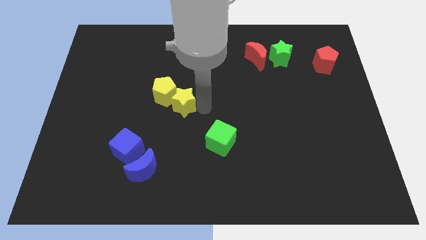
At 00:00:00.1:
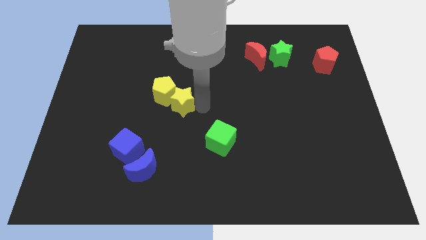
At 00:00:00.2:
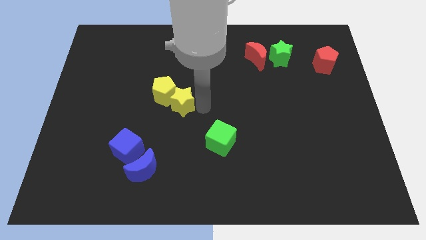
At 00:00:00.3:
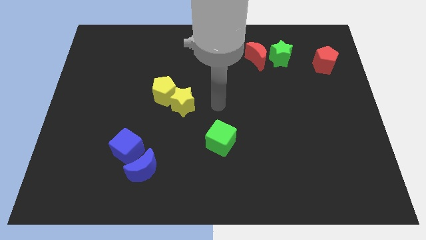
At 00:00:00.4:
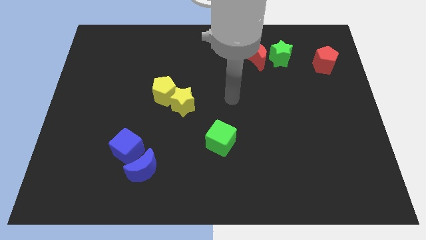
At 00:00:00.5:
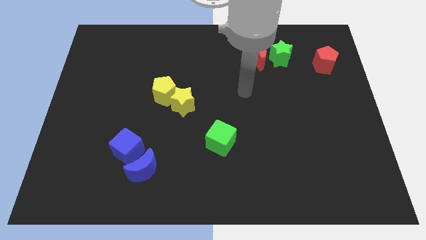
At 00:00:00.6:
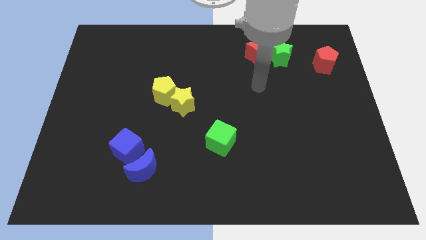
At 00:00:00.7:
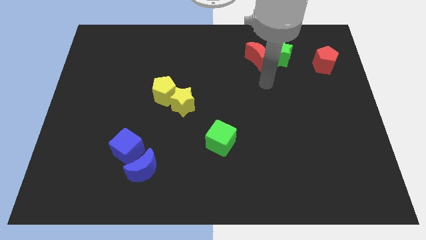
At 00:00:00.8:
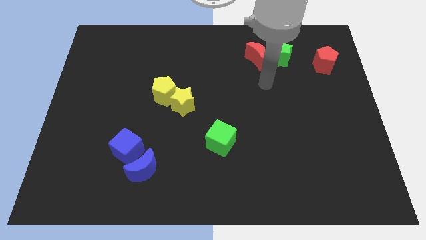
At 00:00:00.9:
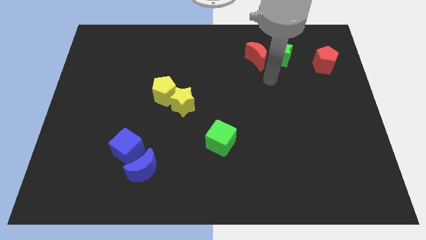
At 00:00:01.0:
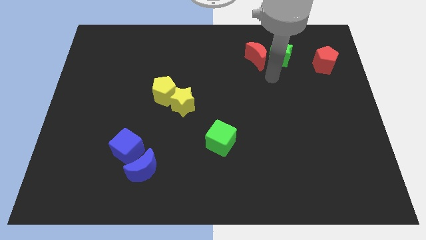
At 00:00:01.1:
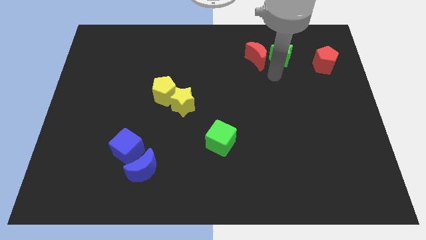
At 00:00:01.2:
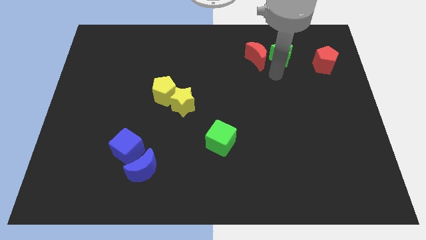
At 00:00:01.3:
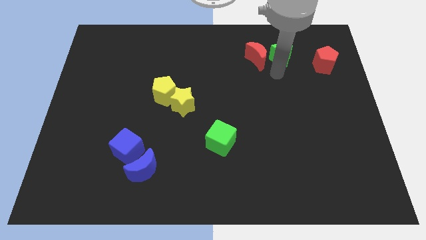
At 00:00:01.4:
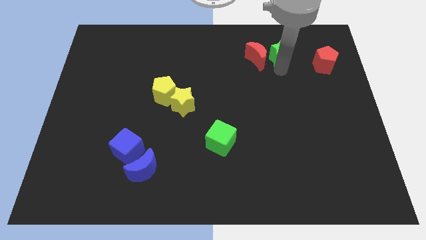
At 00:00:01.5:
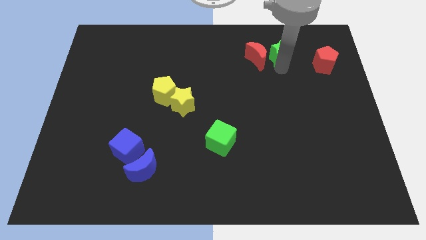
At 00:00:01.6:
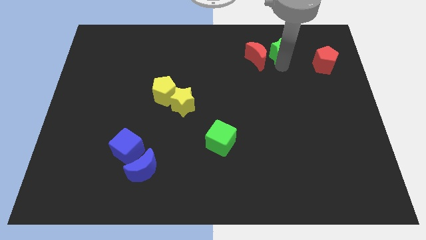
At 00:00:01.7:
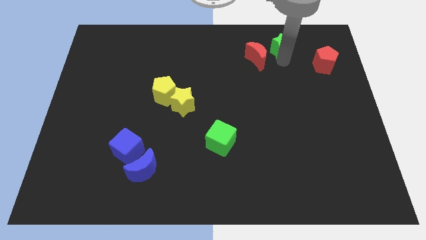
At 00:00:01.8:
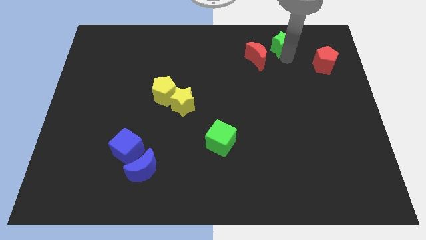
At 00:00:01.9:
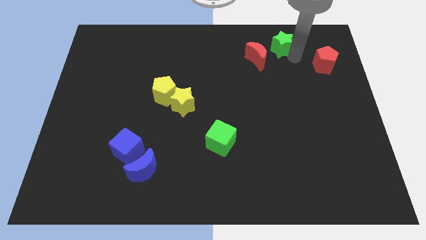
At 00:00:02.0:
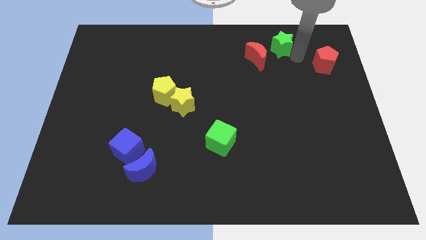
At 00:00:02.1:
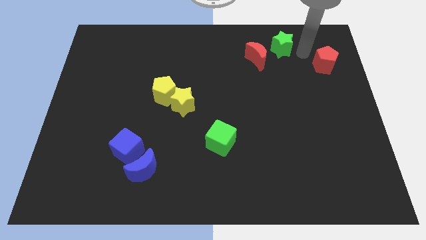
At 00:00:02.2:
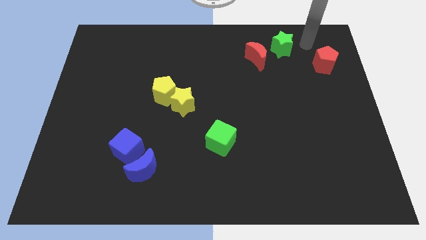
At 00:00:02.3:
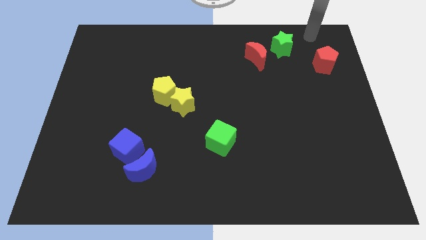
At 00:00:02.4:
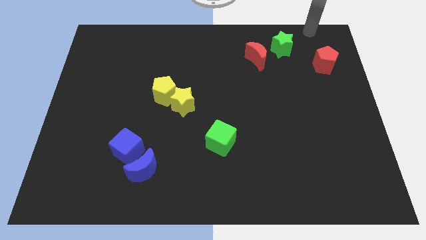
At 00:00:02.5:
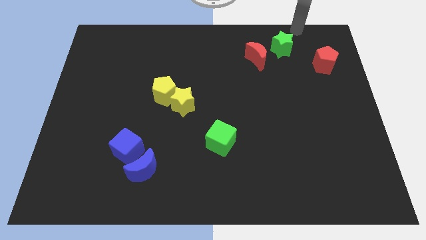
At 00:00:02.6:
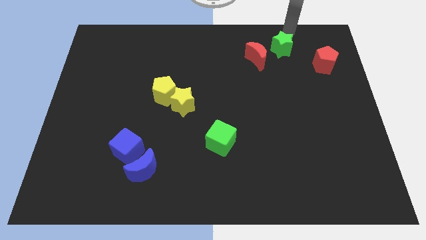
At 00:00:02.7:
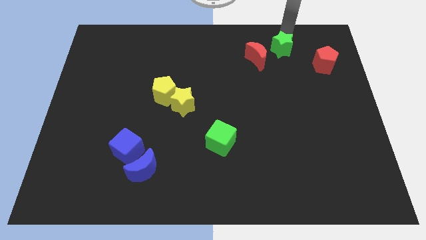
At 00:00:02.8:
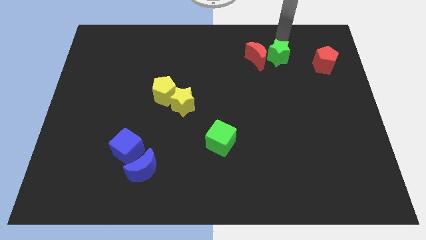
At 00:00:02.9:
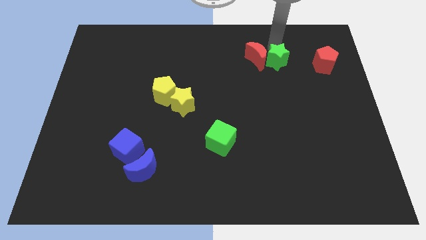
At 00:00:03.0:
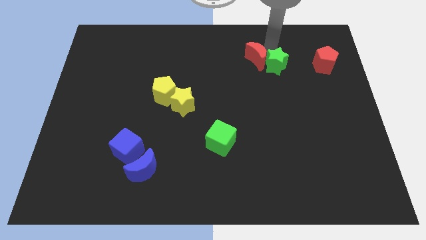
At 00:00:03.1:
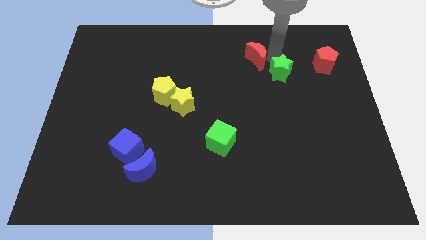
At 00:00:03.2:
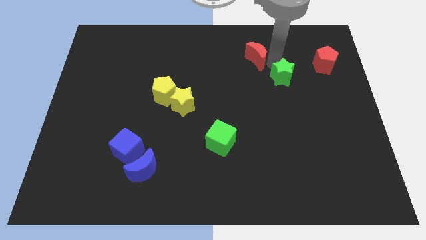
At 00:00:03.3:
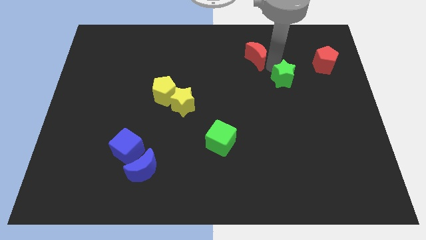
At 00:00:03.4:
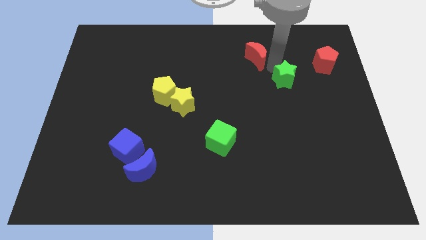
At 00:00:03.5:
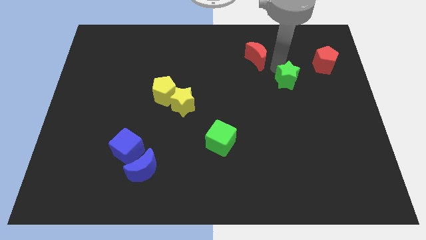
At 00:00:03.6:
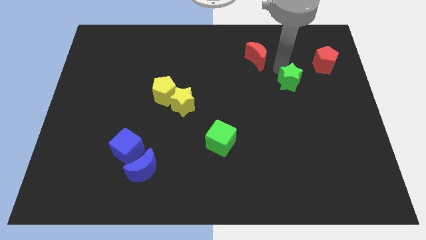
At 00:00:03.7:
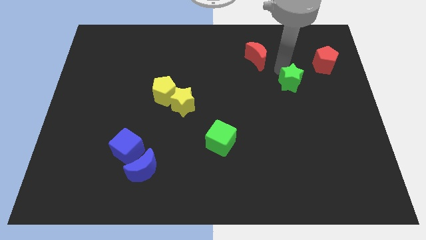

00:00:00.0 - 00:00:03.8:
move the green star to the right center of the board

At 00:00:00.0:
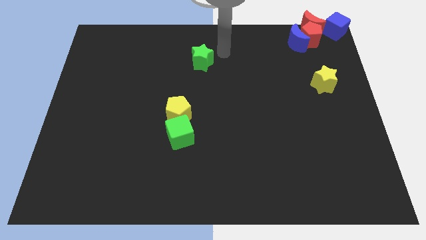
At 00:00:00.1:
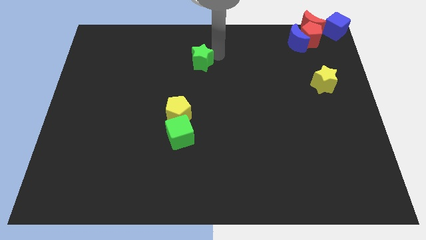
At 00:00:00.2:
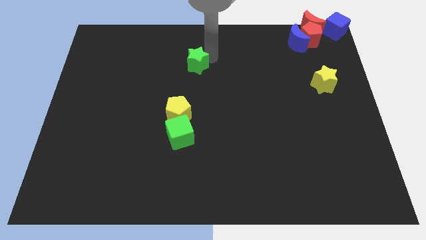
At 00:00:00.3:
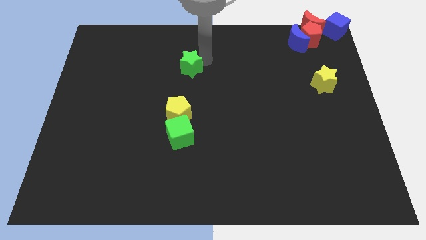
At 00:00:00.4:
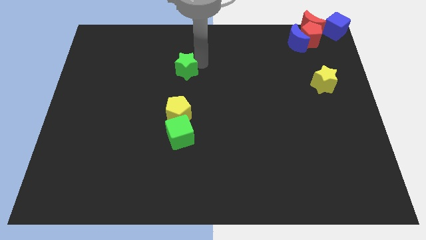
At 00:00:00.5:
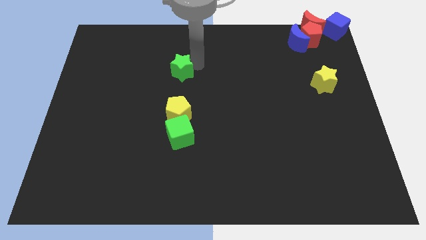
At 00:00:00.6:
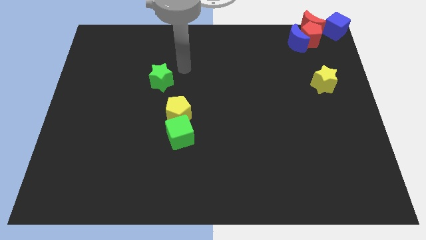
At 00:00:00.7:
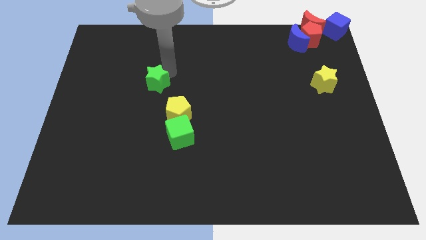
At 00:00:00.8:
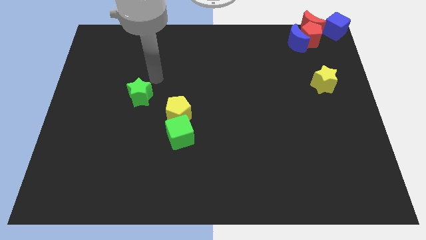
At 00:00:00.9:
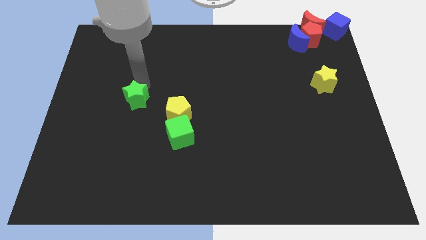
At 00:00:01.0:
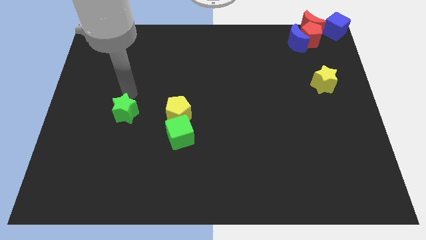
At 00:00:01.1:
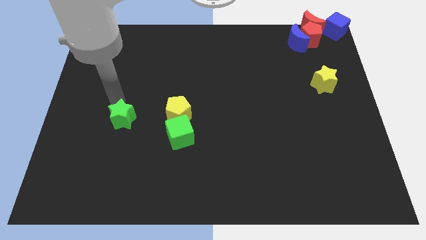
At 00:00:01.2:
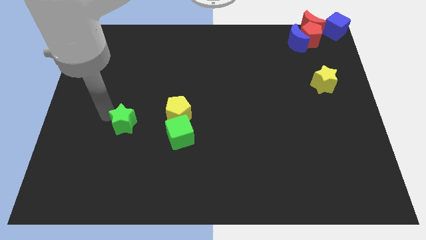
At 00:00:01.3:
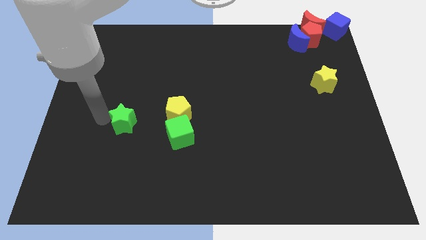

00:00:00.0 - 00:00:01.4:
push the green star towards the left to the yellow pentagon

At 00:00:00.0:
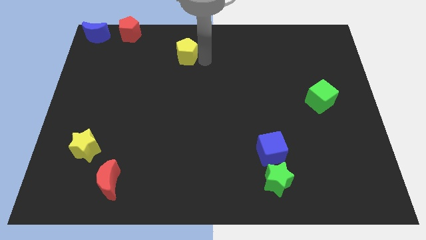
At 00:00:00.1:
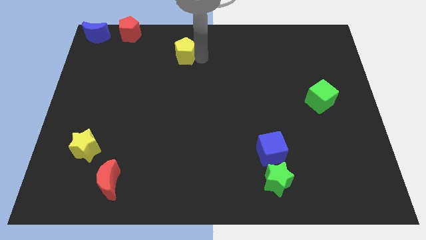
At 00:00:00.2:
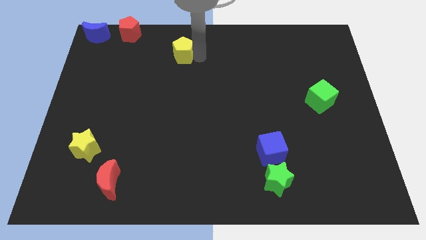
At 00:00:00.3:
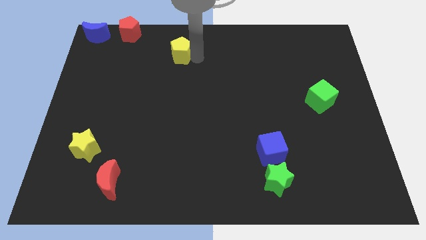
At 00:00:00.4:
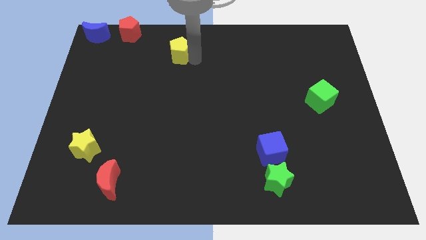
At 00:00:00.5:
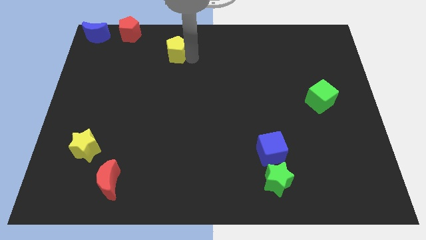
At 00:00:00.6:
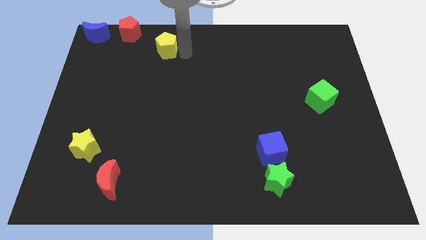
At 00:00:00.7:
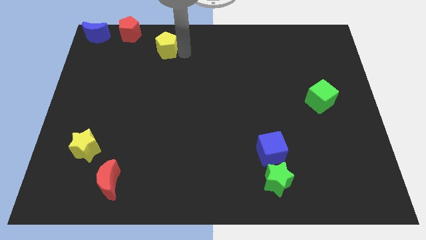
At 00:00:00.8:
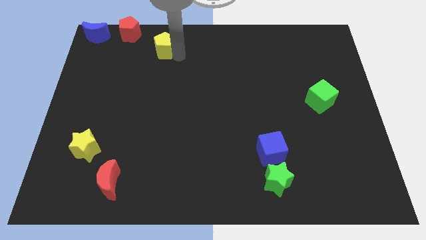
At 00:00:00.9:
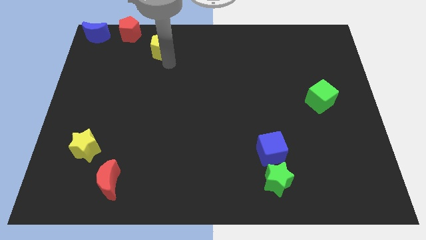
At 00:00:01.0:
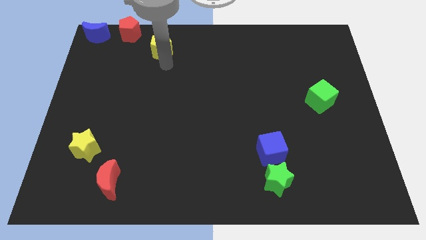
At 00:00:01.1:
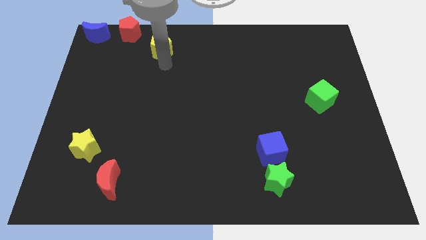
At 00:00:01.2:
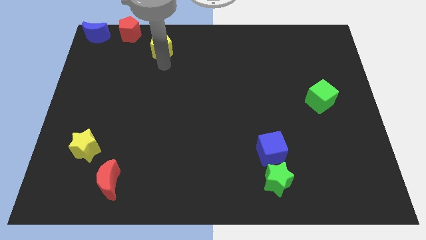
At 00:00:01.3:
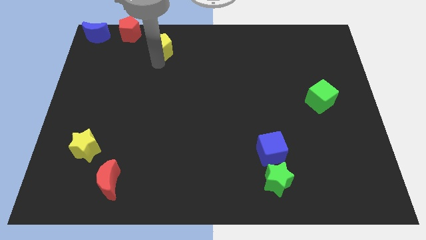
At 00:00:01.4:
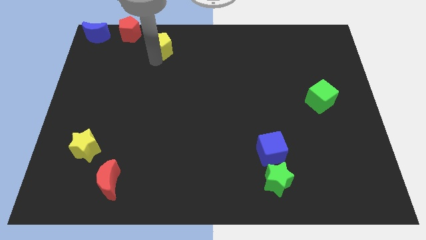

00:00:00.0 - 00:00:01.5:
move the yellow pentagon close to the red pentagon

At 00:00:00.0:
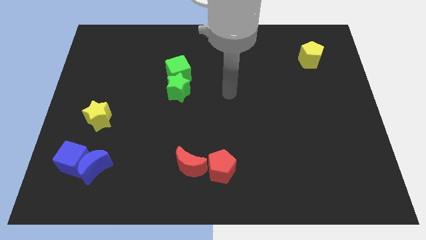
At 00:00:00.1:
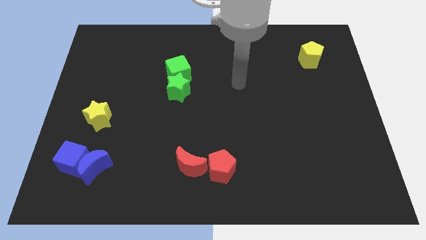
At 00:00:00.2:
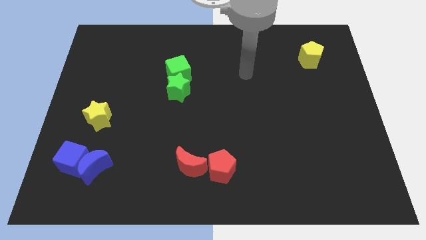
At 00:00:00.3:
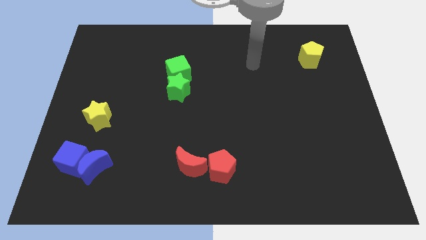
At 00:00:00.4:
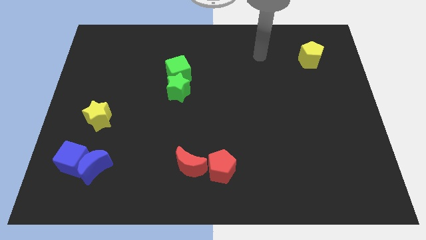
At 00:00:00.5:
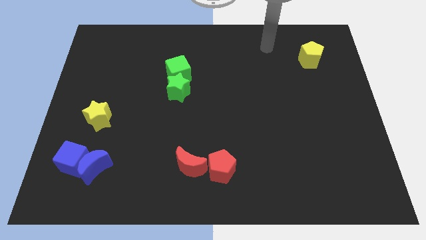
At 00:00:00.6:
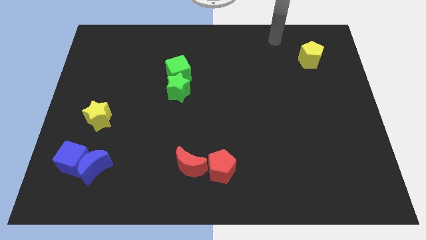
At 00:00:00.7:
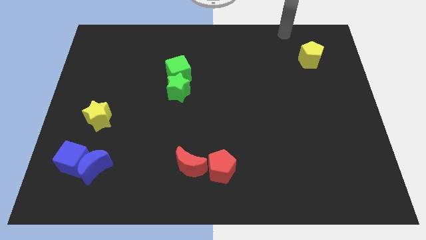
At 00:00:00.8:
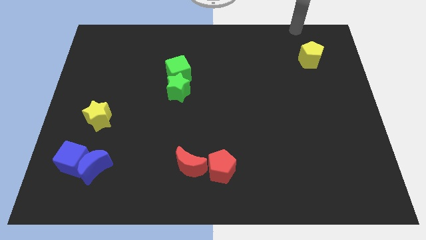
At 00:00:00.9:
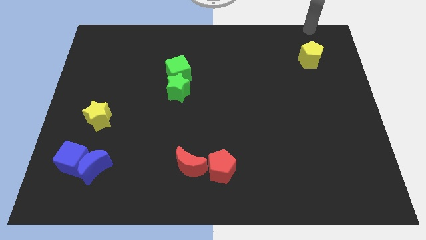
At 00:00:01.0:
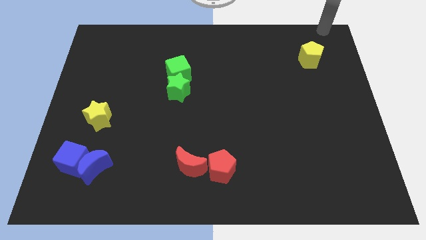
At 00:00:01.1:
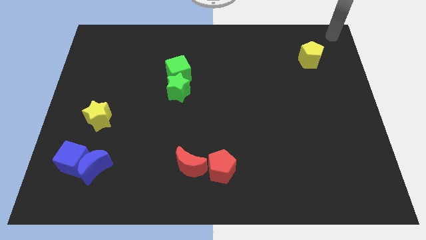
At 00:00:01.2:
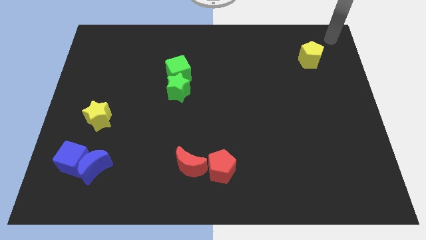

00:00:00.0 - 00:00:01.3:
point your hand at the top right of the board

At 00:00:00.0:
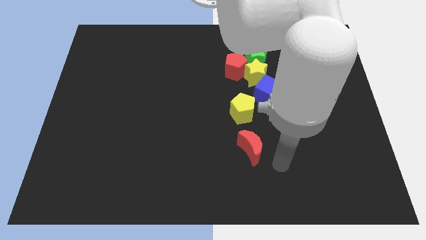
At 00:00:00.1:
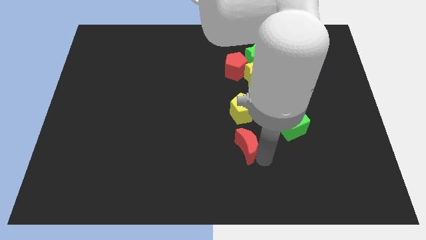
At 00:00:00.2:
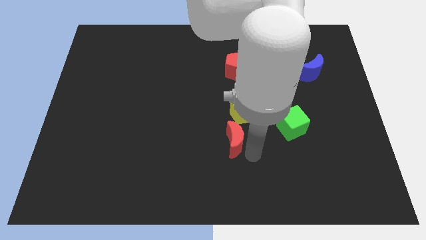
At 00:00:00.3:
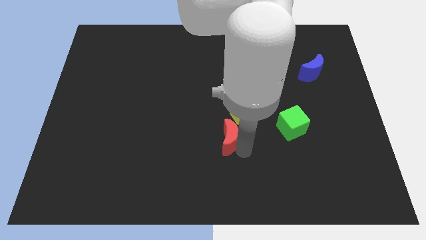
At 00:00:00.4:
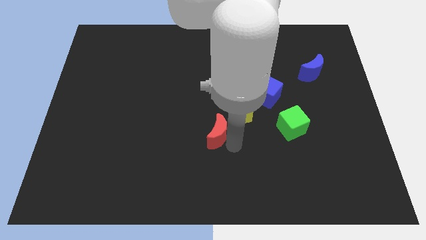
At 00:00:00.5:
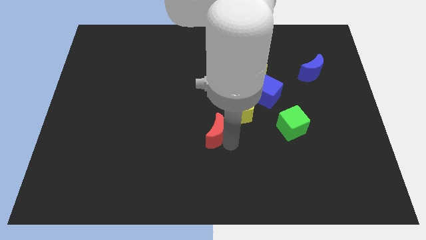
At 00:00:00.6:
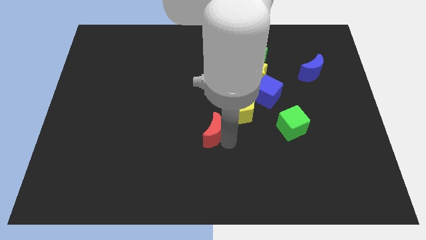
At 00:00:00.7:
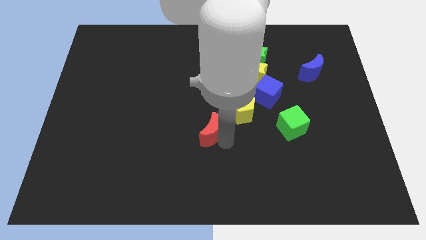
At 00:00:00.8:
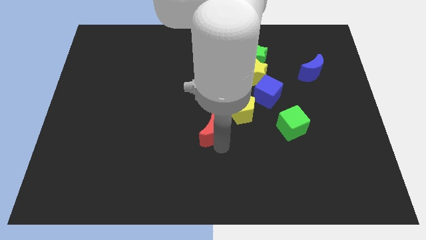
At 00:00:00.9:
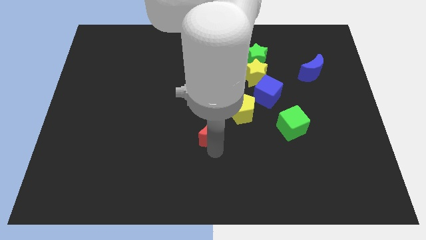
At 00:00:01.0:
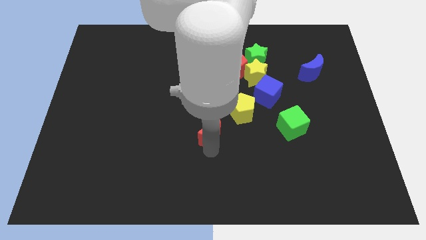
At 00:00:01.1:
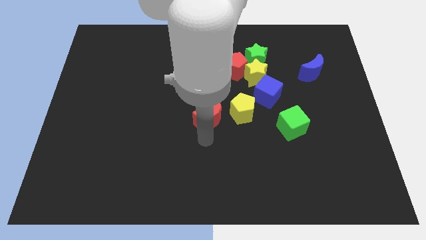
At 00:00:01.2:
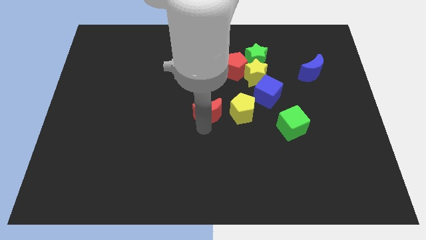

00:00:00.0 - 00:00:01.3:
move the red crescent parallel to the left of the yellow pentagon
